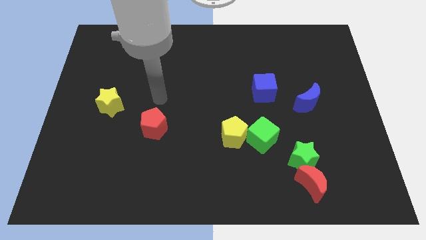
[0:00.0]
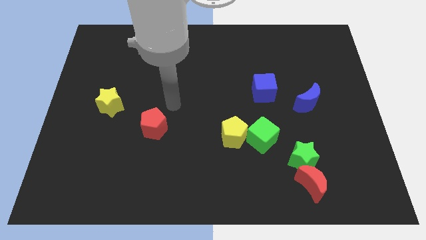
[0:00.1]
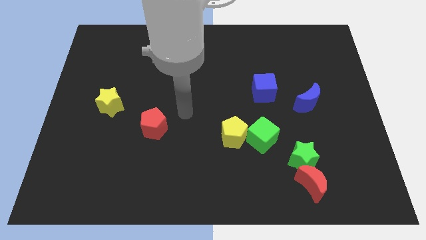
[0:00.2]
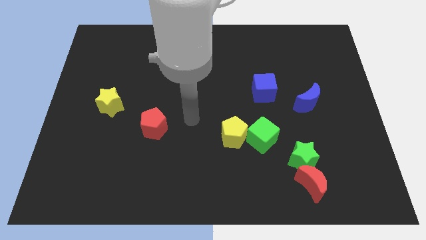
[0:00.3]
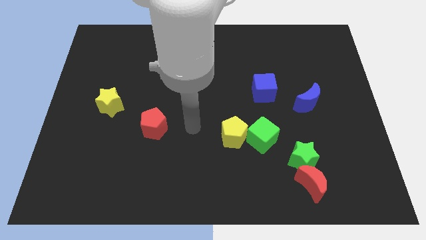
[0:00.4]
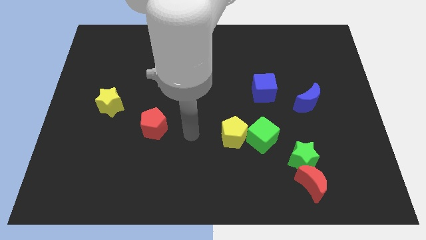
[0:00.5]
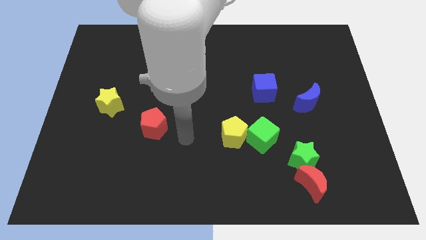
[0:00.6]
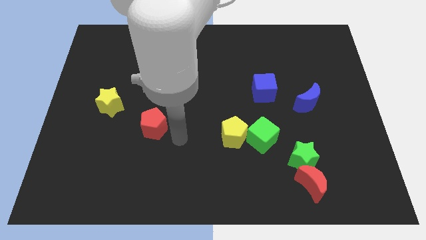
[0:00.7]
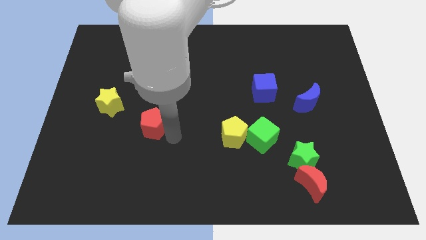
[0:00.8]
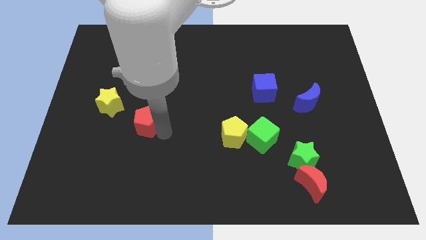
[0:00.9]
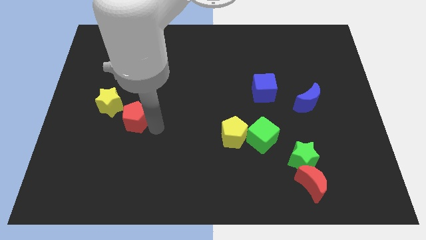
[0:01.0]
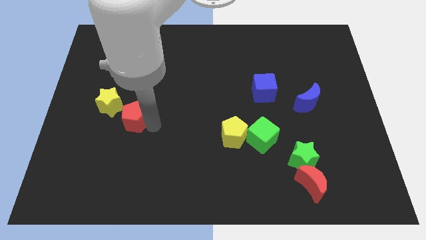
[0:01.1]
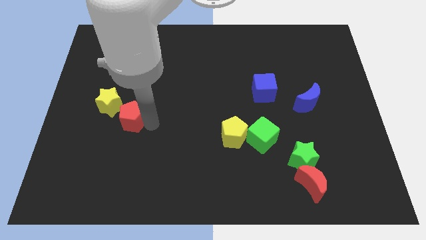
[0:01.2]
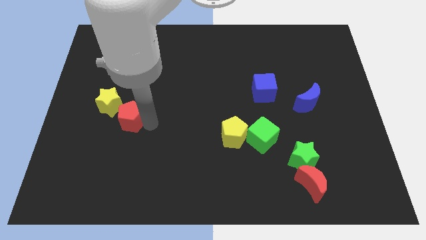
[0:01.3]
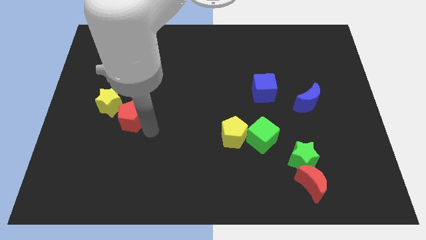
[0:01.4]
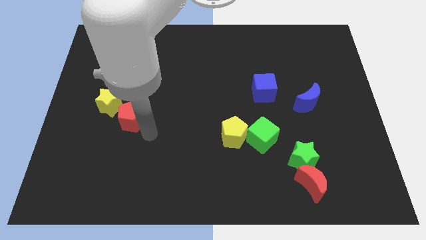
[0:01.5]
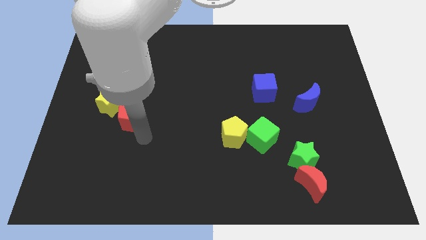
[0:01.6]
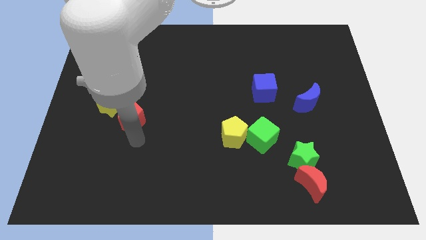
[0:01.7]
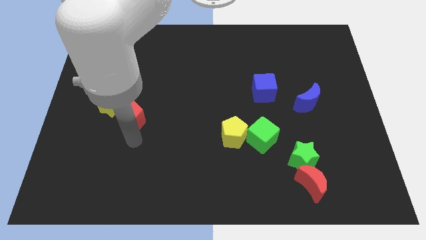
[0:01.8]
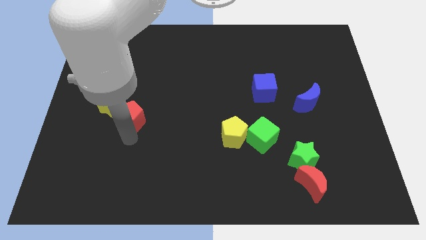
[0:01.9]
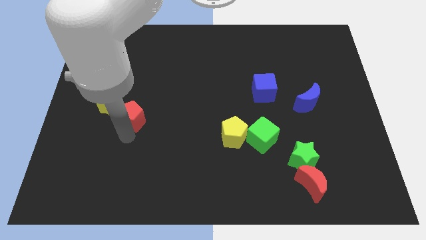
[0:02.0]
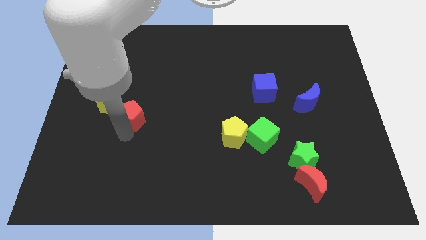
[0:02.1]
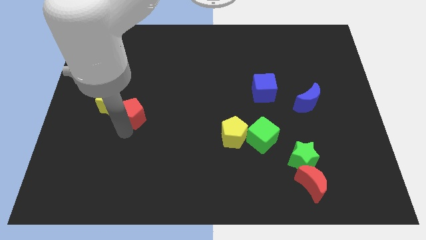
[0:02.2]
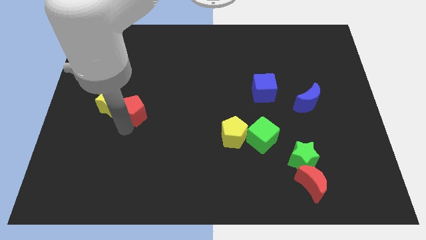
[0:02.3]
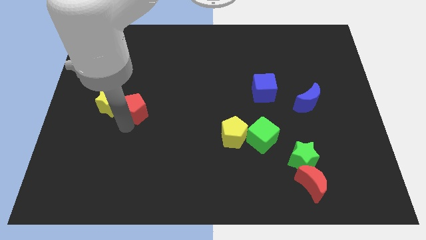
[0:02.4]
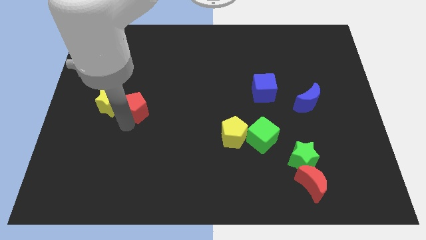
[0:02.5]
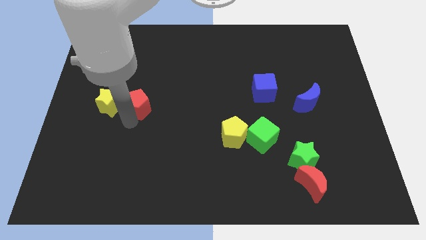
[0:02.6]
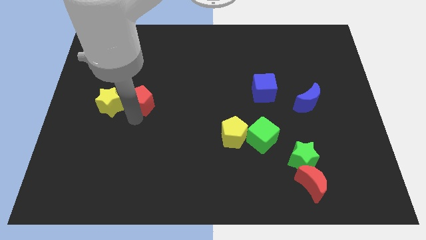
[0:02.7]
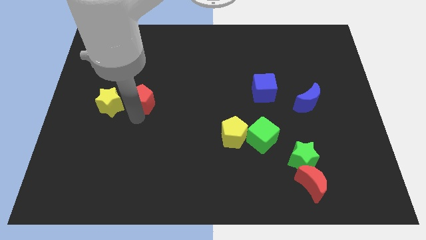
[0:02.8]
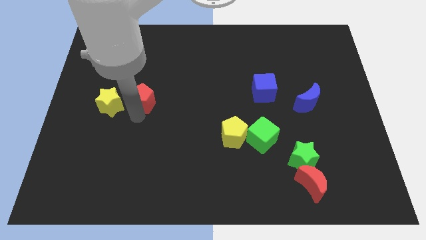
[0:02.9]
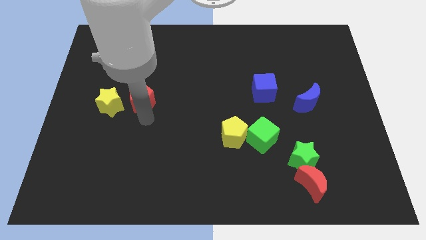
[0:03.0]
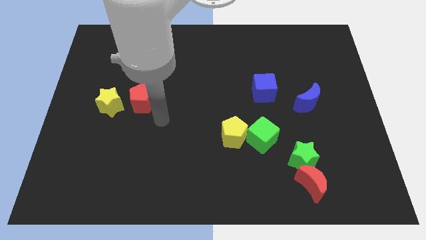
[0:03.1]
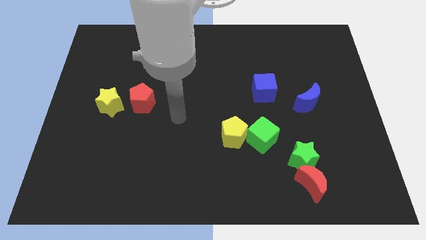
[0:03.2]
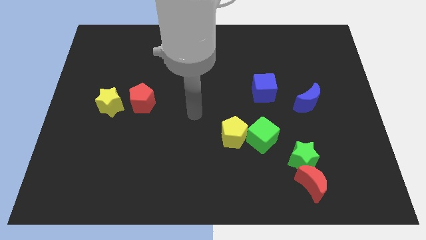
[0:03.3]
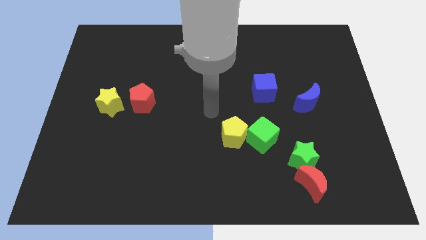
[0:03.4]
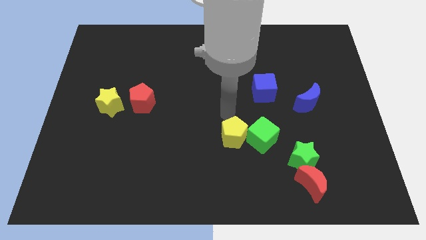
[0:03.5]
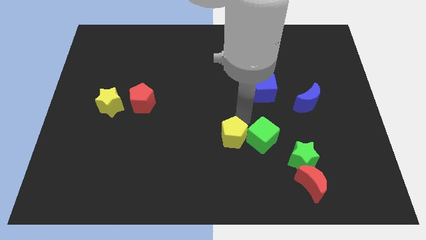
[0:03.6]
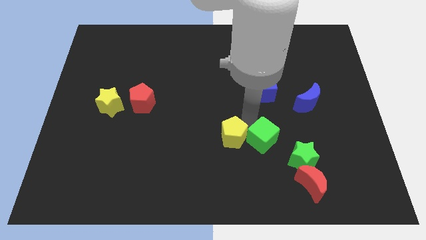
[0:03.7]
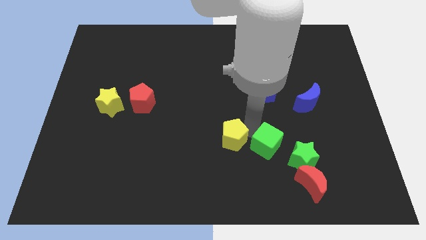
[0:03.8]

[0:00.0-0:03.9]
place the red pentagon right the yellow star

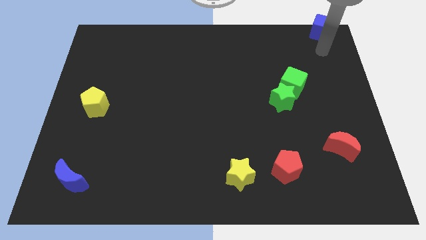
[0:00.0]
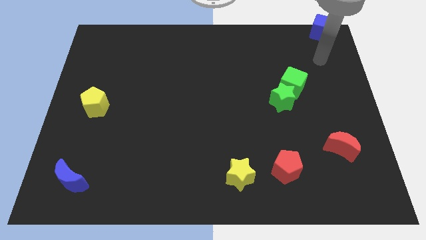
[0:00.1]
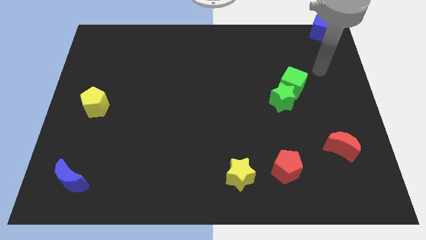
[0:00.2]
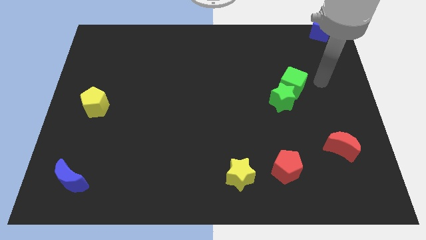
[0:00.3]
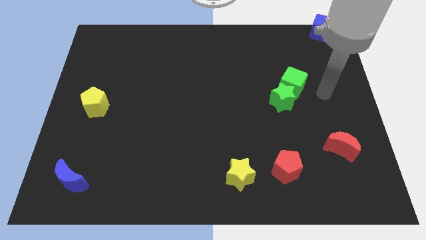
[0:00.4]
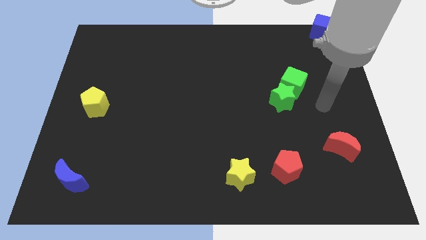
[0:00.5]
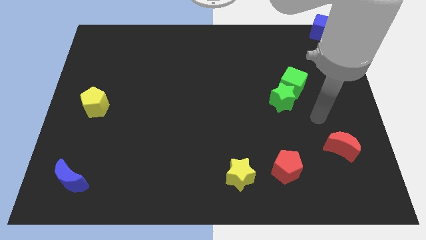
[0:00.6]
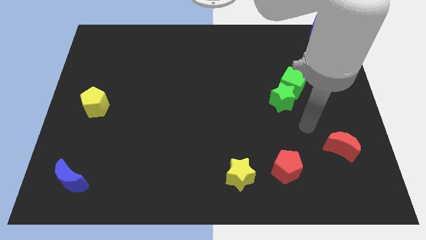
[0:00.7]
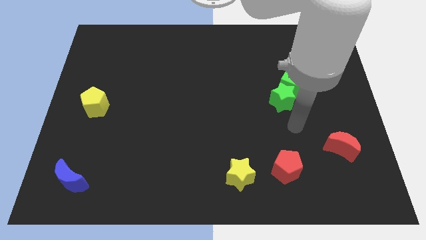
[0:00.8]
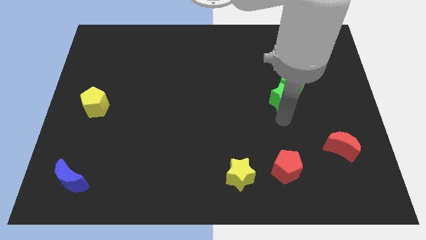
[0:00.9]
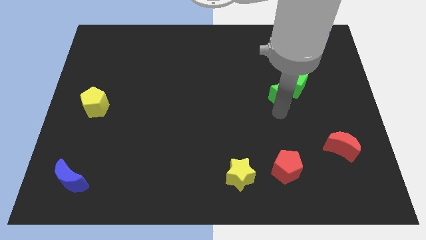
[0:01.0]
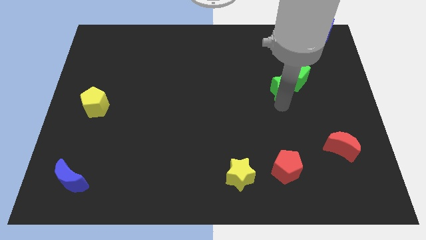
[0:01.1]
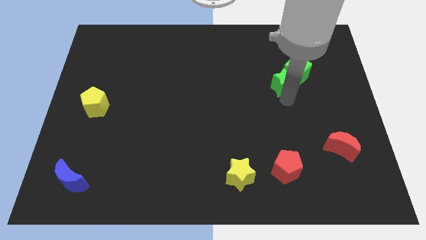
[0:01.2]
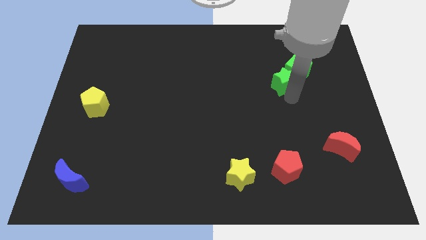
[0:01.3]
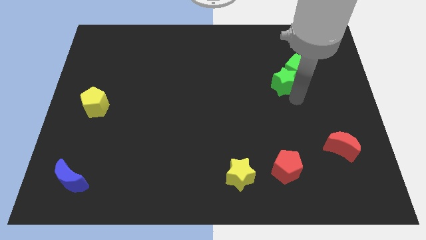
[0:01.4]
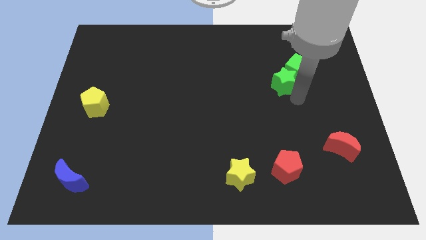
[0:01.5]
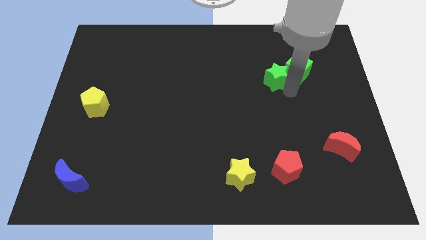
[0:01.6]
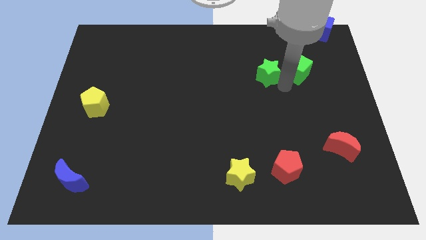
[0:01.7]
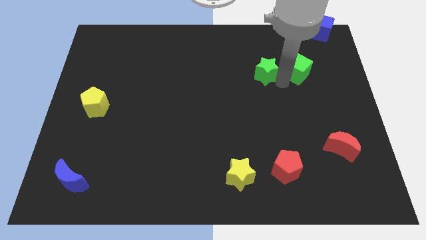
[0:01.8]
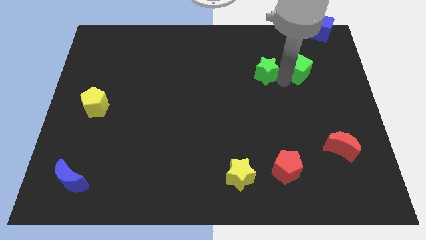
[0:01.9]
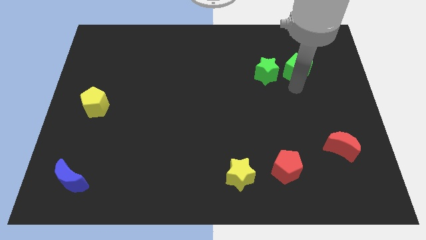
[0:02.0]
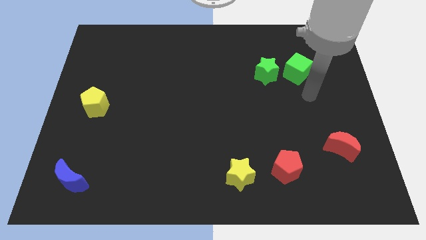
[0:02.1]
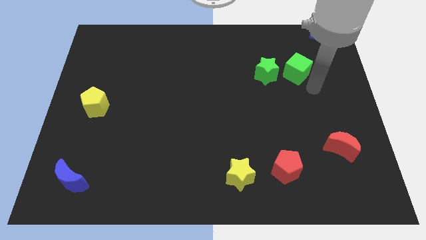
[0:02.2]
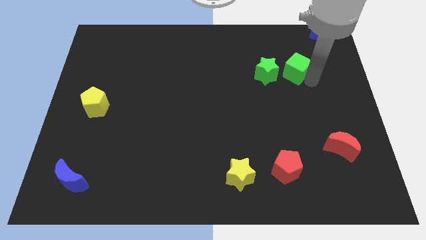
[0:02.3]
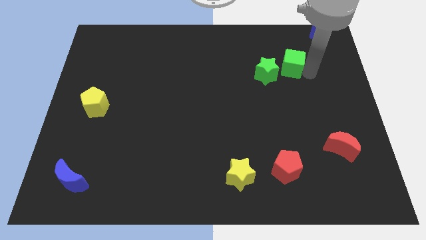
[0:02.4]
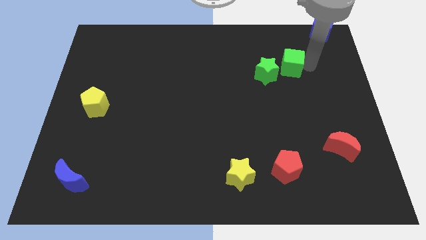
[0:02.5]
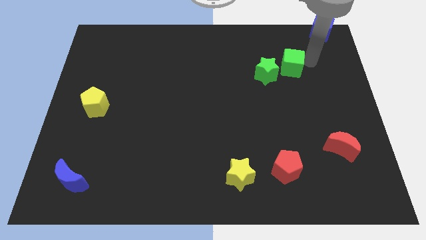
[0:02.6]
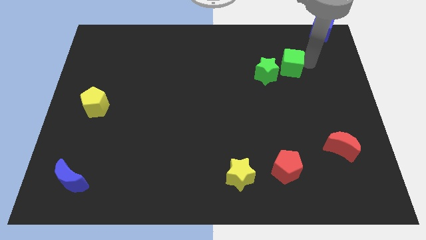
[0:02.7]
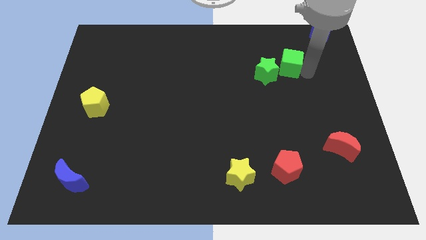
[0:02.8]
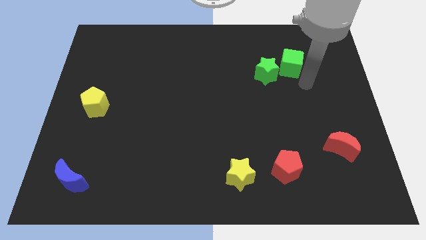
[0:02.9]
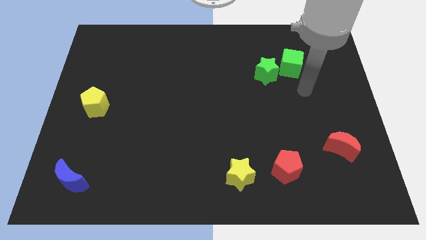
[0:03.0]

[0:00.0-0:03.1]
separate the green blocks from each other

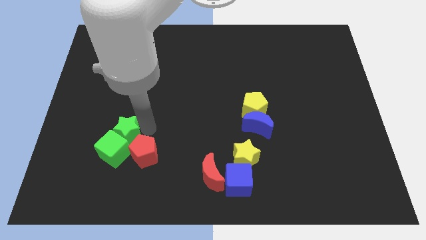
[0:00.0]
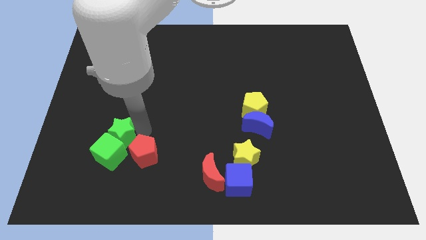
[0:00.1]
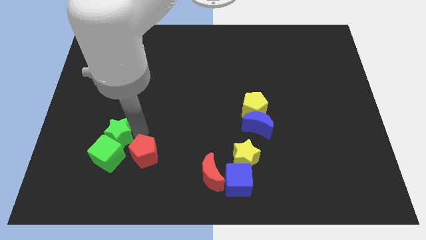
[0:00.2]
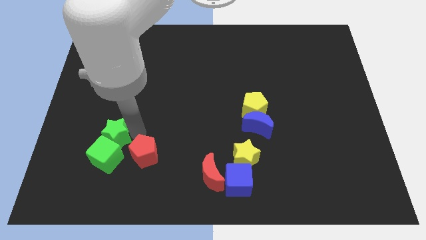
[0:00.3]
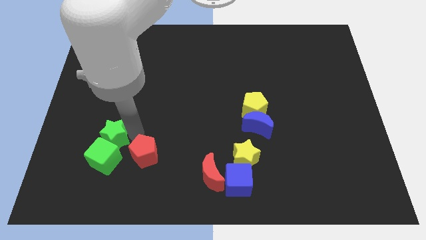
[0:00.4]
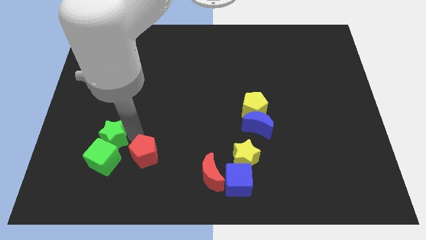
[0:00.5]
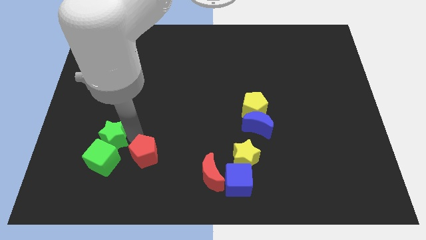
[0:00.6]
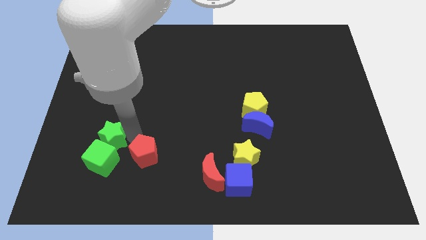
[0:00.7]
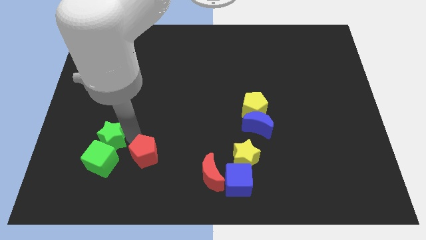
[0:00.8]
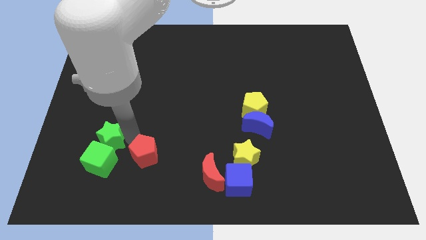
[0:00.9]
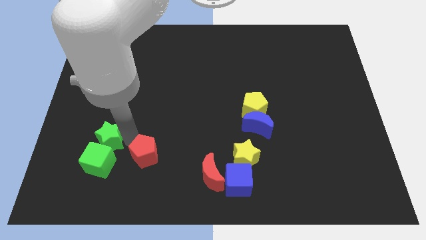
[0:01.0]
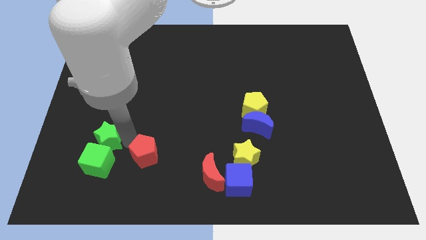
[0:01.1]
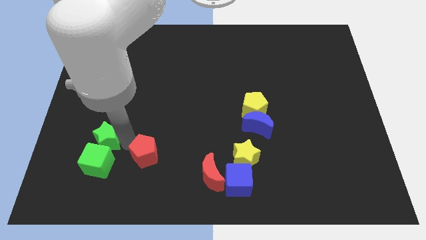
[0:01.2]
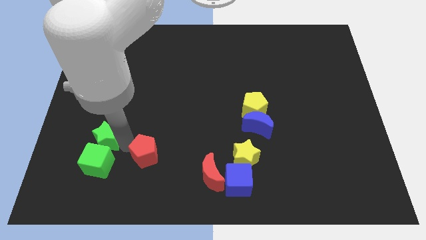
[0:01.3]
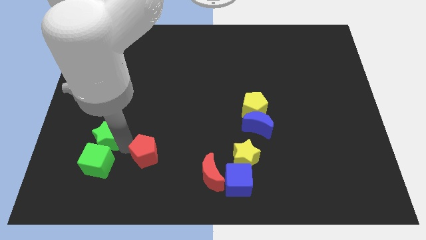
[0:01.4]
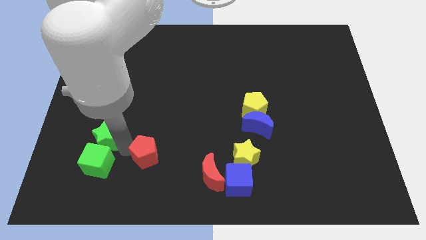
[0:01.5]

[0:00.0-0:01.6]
push the green blocks away from the red pentagon

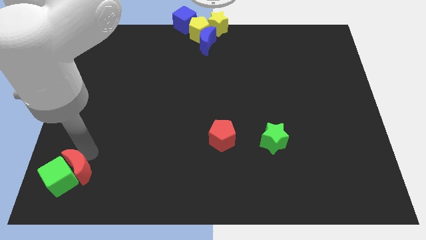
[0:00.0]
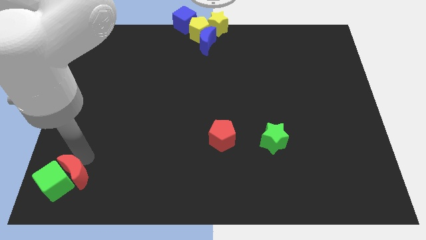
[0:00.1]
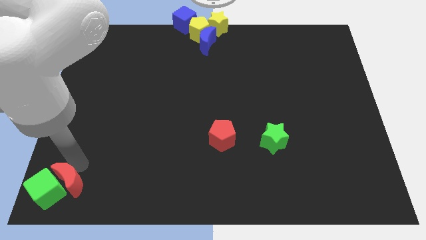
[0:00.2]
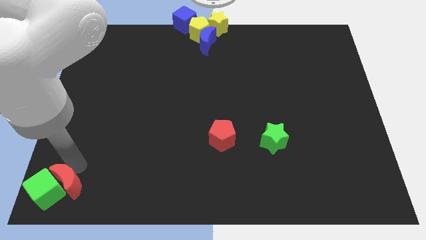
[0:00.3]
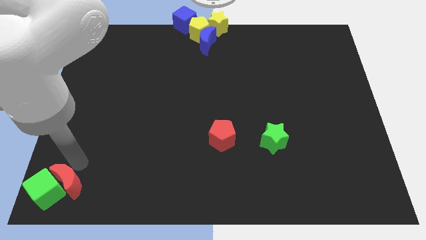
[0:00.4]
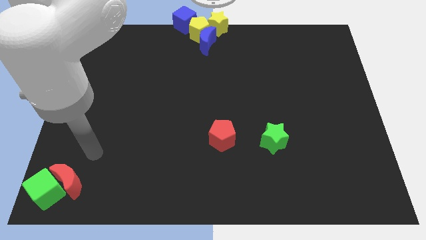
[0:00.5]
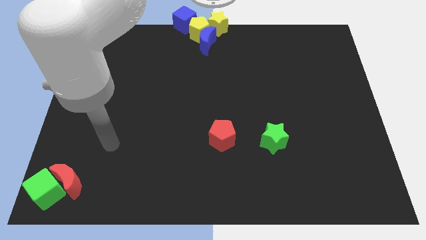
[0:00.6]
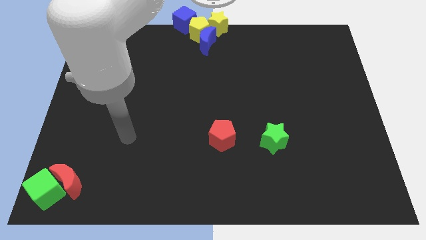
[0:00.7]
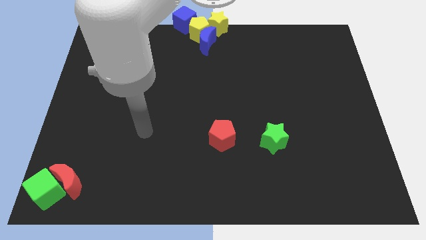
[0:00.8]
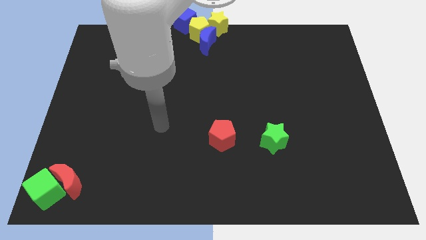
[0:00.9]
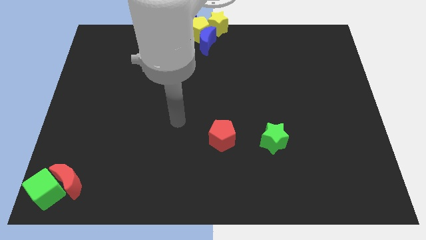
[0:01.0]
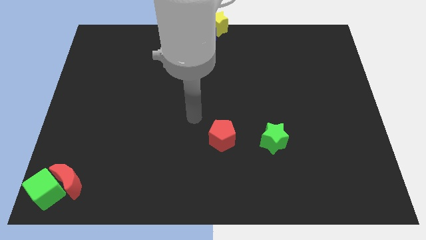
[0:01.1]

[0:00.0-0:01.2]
move the red crescent and green cube to the bottom left corner
